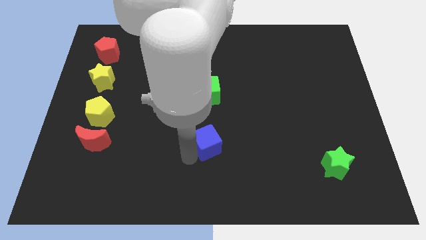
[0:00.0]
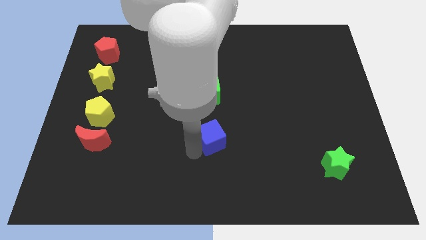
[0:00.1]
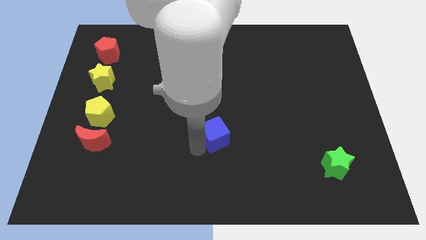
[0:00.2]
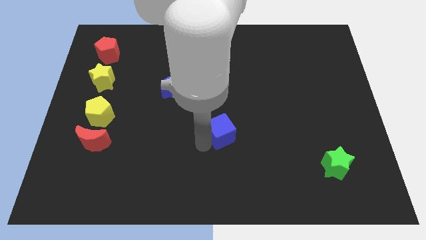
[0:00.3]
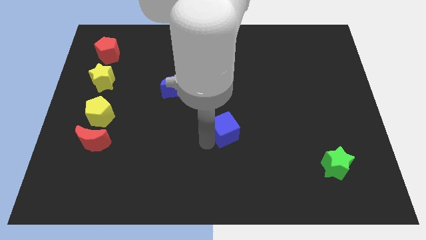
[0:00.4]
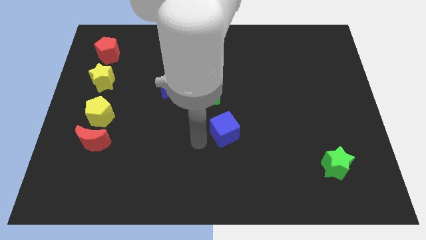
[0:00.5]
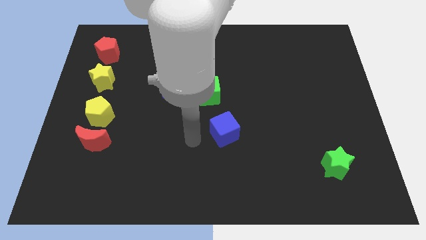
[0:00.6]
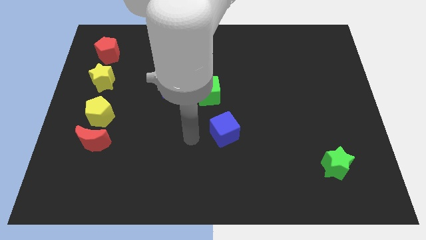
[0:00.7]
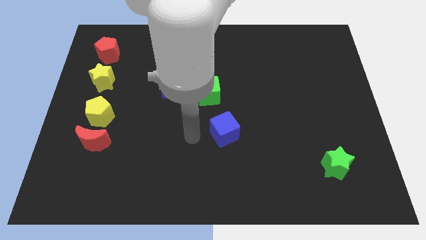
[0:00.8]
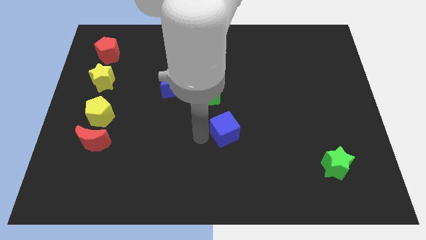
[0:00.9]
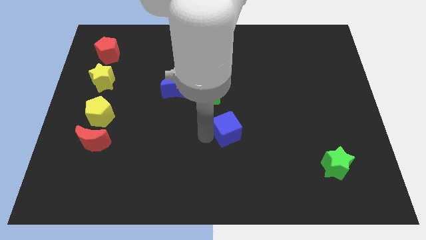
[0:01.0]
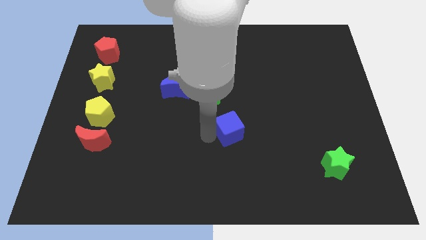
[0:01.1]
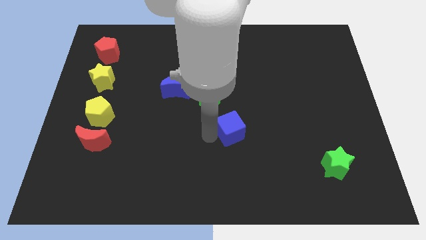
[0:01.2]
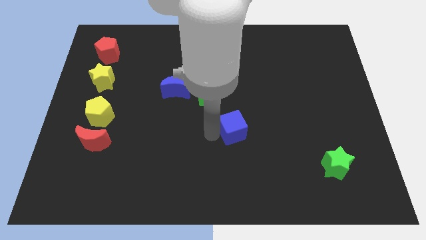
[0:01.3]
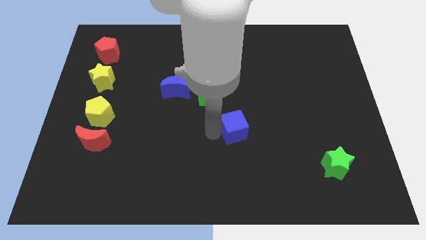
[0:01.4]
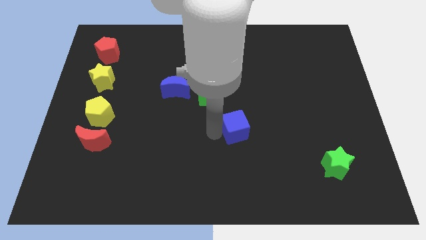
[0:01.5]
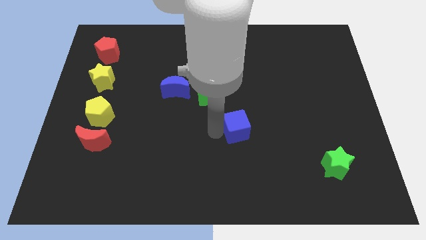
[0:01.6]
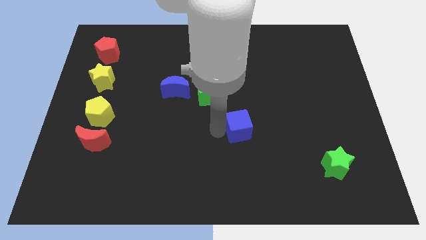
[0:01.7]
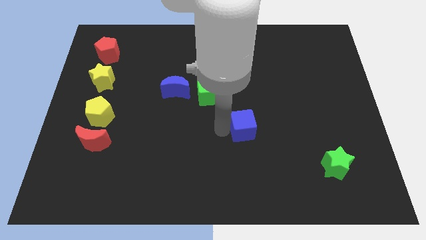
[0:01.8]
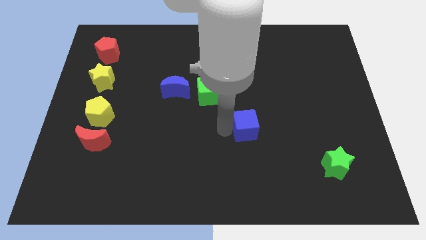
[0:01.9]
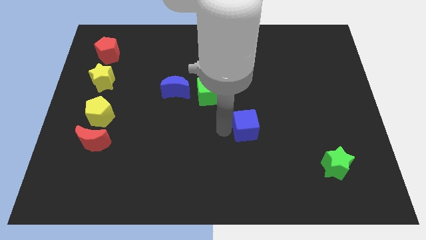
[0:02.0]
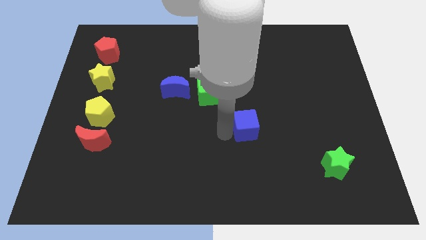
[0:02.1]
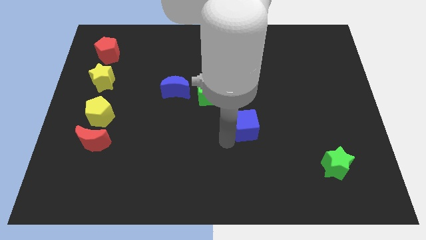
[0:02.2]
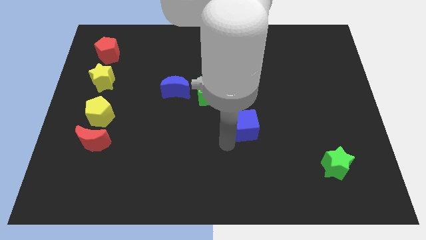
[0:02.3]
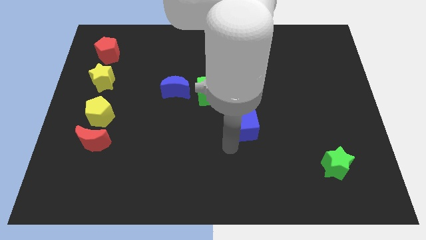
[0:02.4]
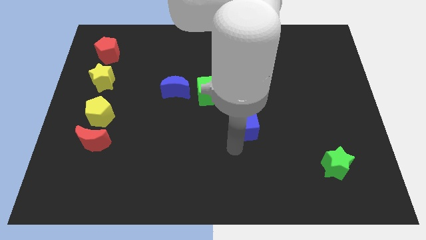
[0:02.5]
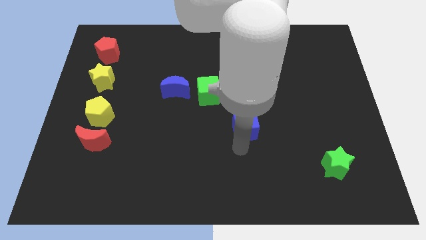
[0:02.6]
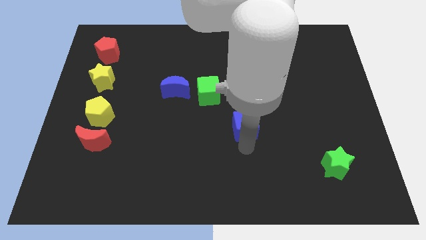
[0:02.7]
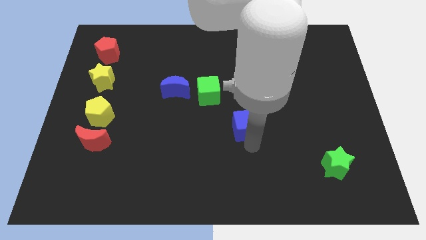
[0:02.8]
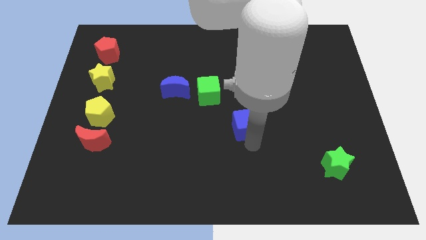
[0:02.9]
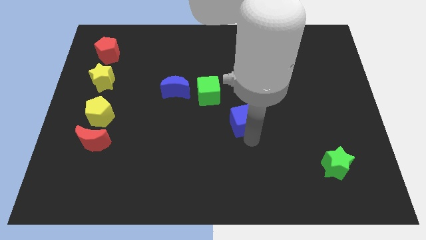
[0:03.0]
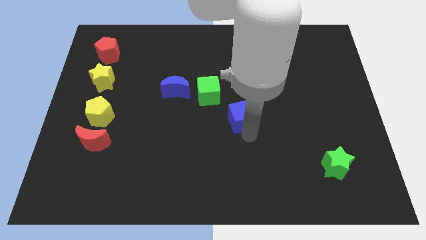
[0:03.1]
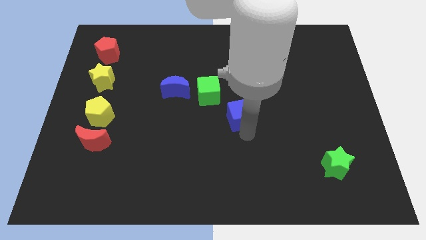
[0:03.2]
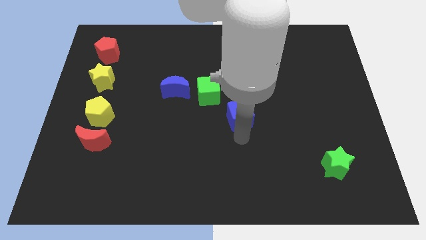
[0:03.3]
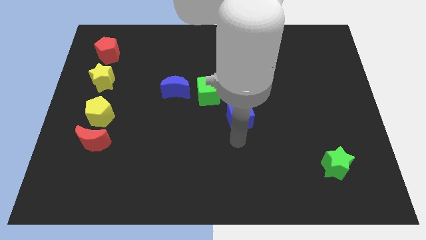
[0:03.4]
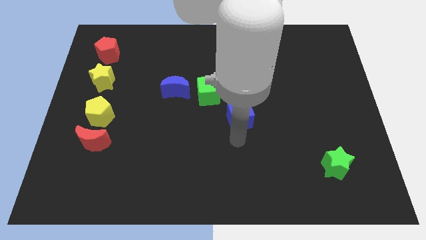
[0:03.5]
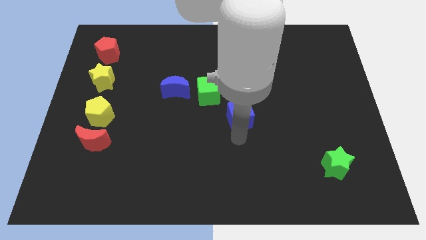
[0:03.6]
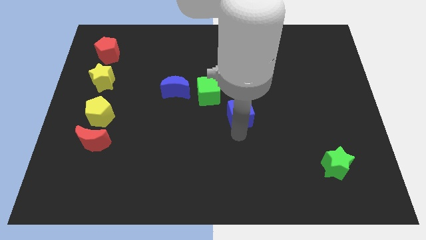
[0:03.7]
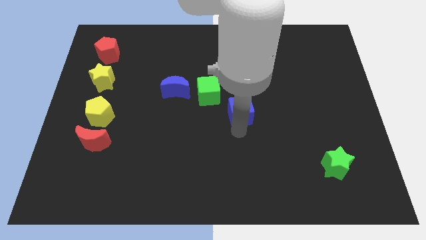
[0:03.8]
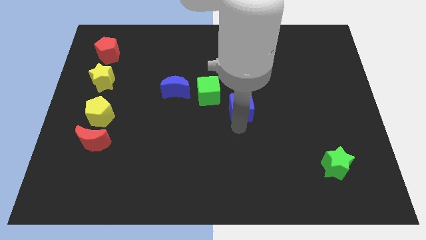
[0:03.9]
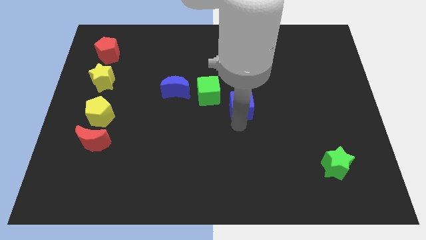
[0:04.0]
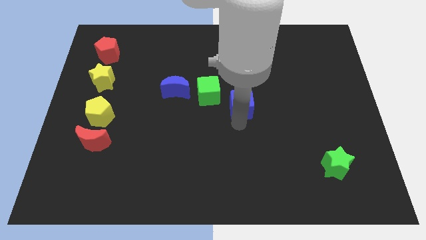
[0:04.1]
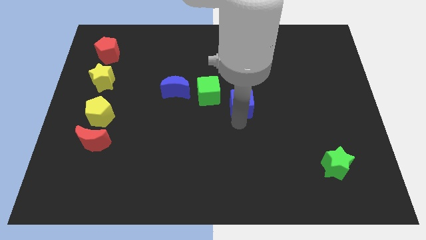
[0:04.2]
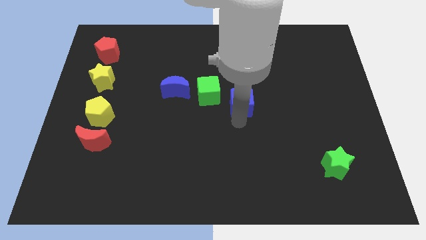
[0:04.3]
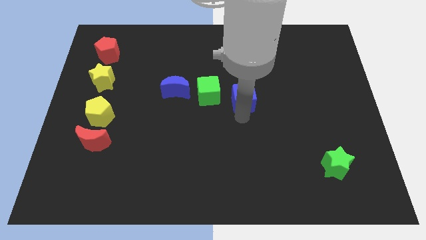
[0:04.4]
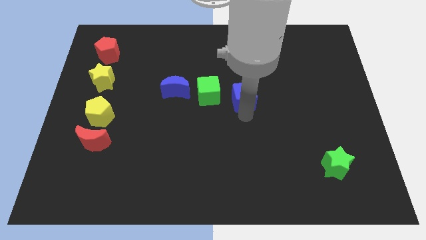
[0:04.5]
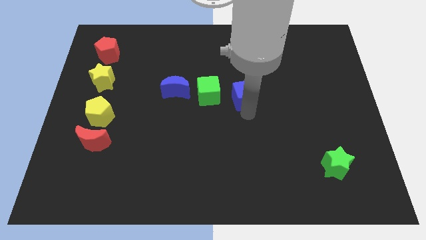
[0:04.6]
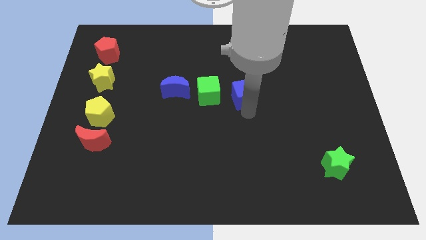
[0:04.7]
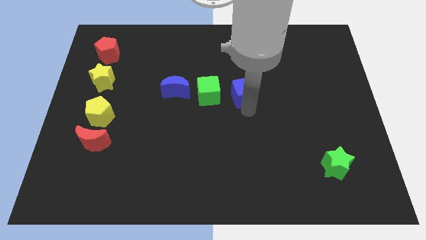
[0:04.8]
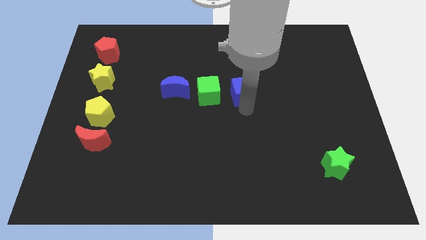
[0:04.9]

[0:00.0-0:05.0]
push blue cube to the right side of the green cube

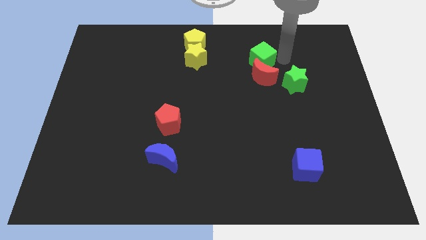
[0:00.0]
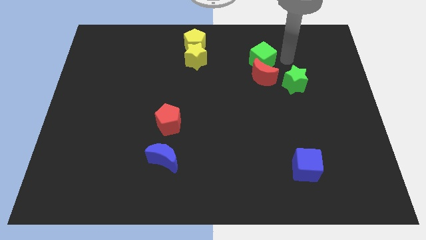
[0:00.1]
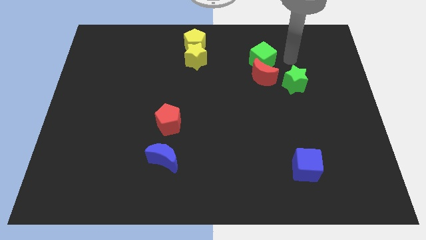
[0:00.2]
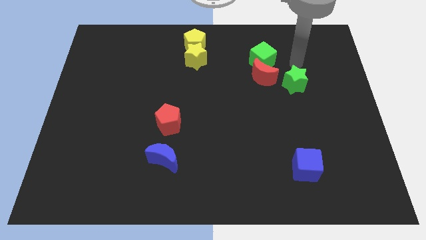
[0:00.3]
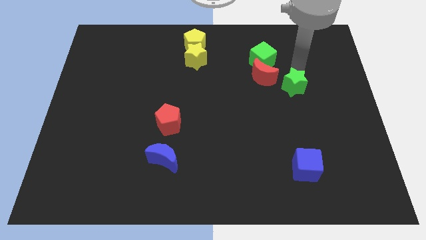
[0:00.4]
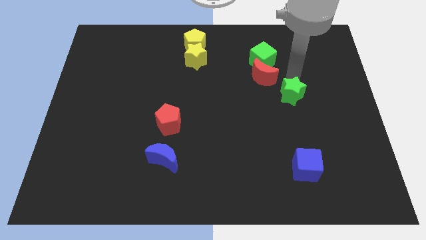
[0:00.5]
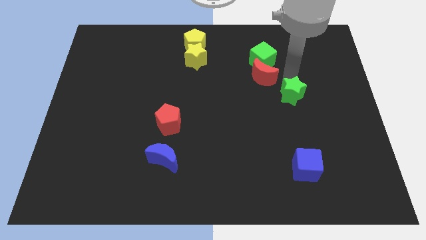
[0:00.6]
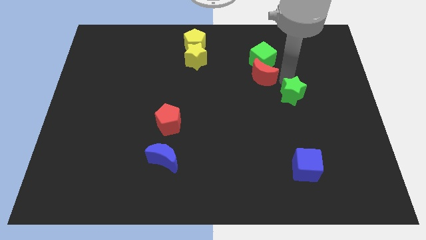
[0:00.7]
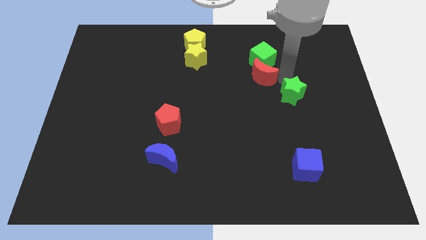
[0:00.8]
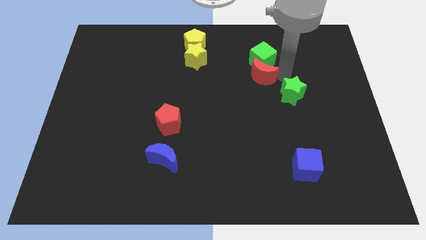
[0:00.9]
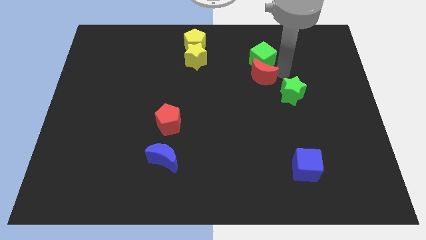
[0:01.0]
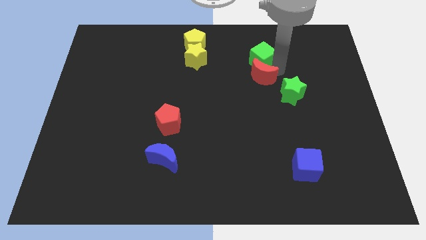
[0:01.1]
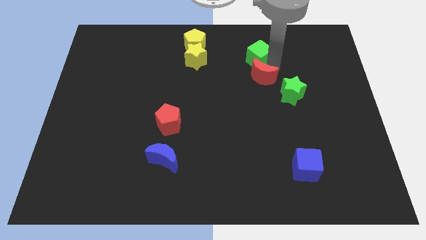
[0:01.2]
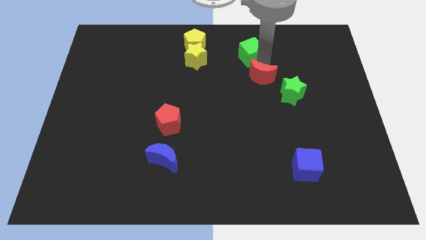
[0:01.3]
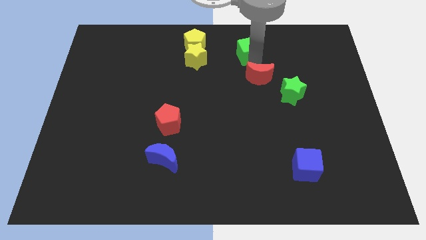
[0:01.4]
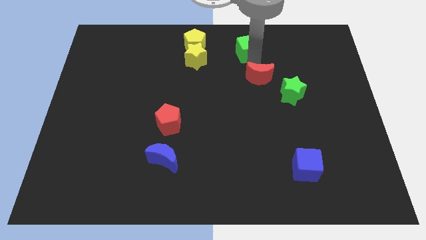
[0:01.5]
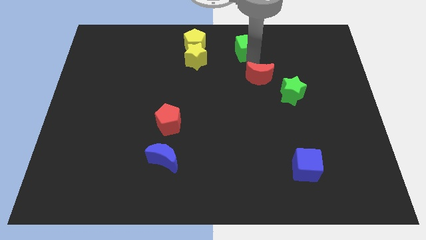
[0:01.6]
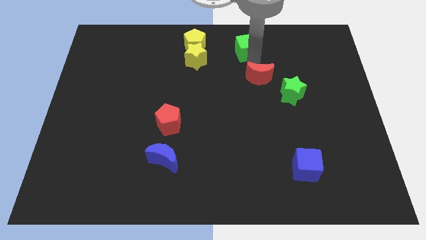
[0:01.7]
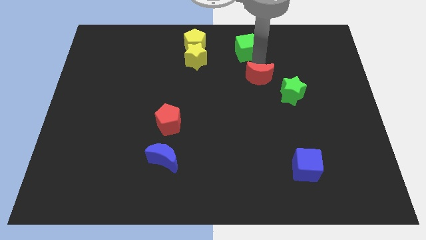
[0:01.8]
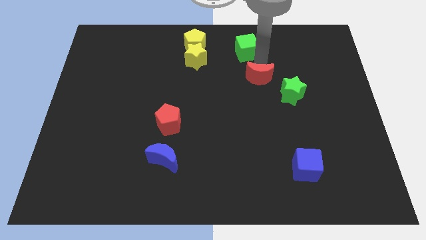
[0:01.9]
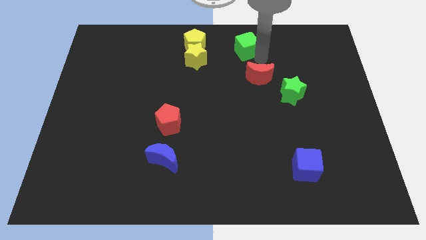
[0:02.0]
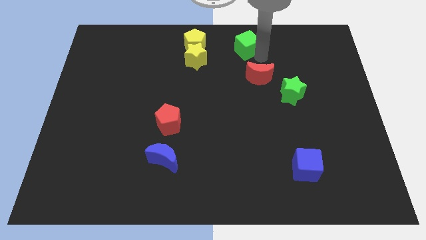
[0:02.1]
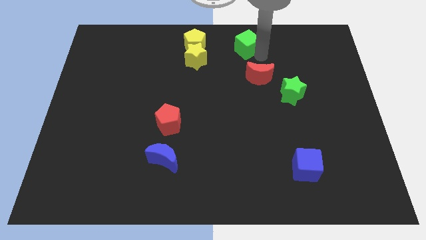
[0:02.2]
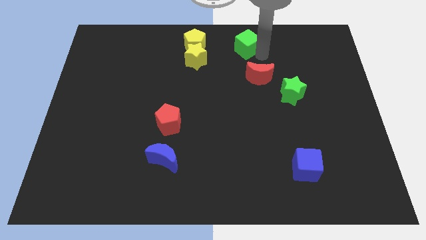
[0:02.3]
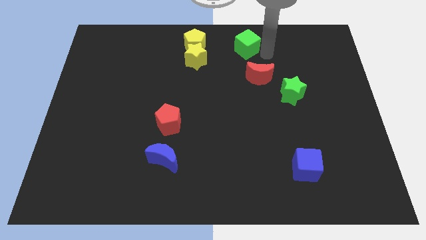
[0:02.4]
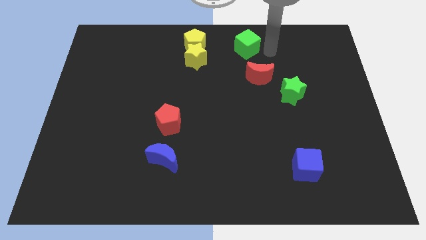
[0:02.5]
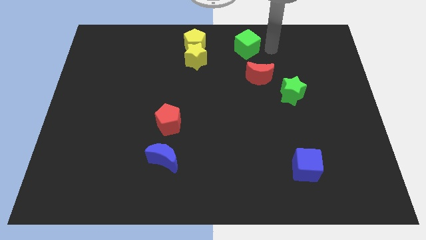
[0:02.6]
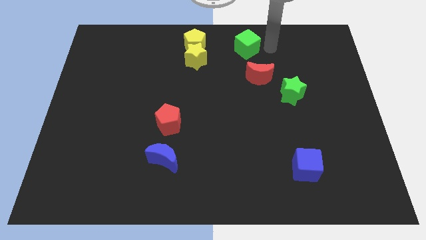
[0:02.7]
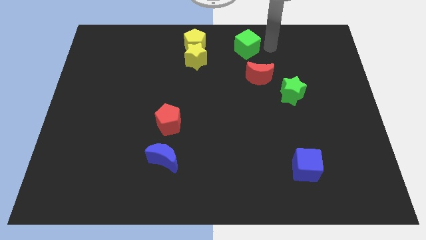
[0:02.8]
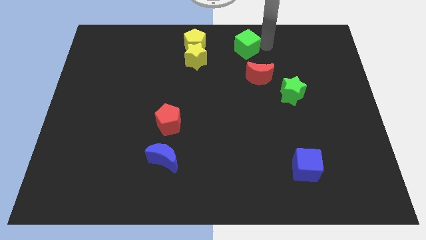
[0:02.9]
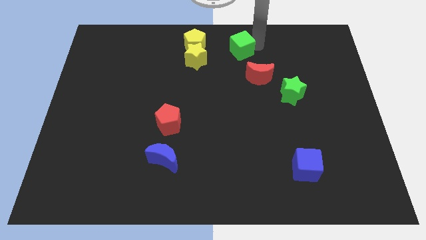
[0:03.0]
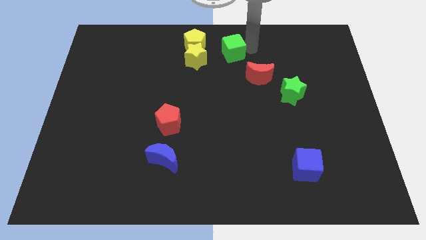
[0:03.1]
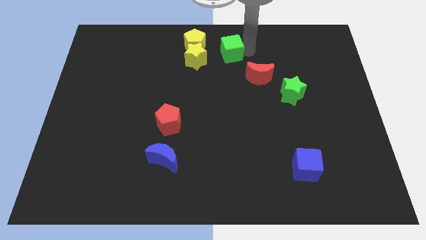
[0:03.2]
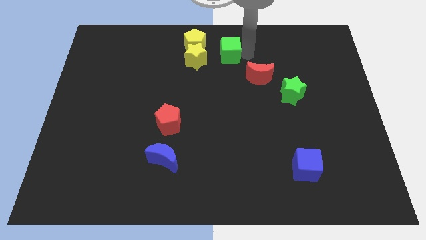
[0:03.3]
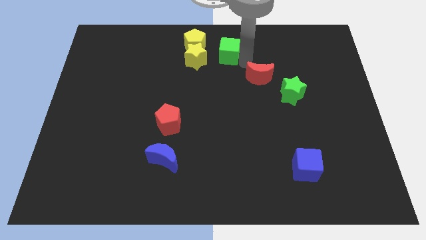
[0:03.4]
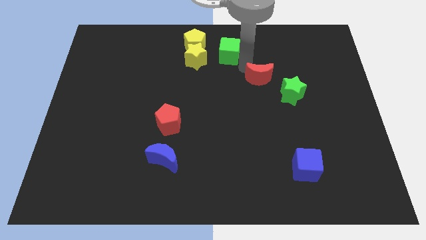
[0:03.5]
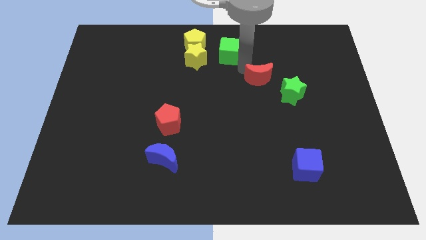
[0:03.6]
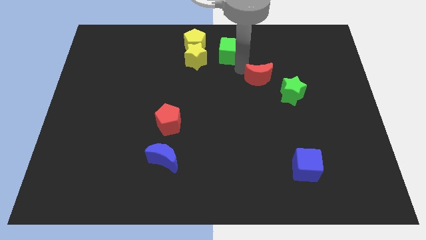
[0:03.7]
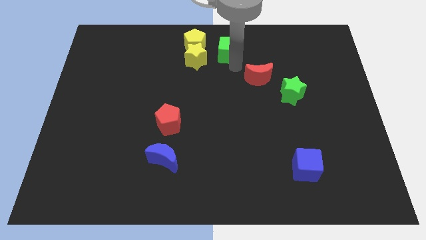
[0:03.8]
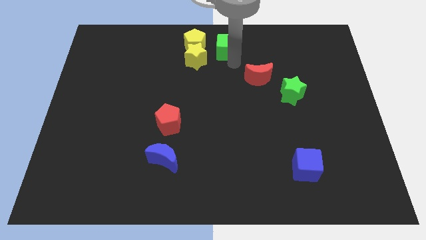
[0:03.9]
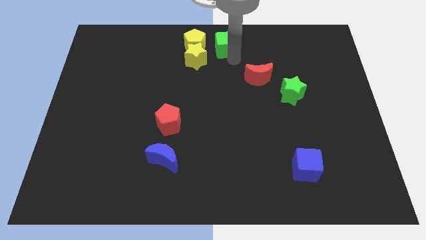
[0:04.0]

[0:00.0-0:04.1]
move green cube towards top center
